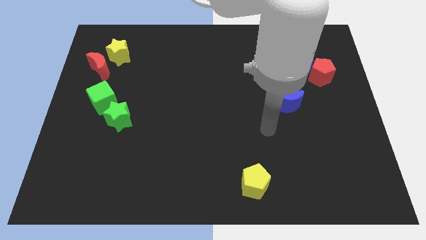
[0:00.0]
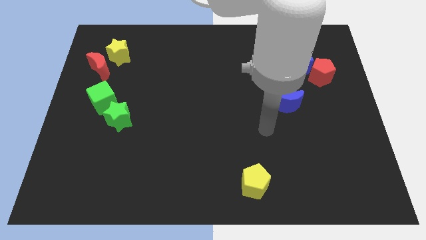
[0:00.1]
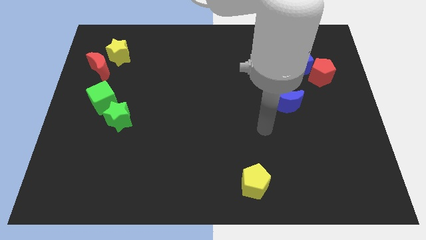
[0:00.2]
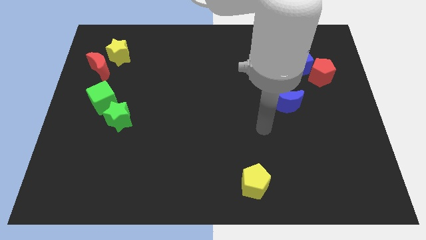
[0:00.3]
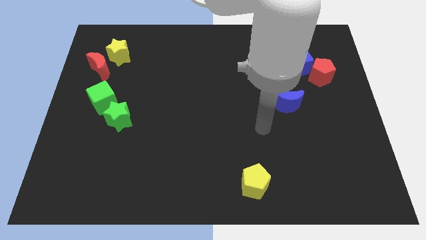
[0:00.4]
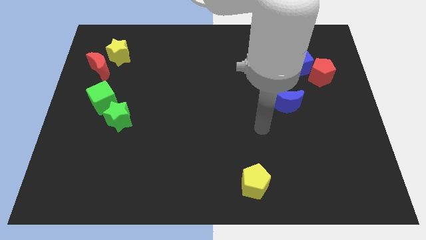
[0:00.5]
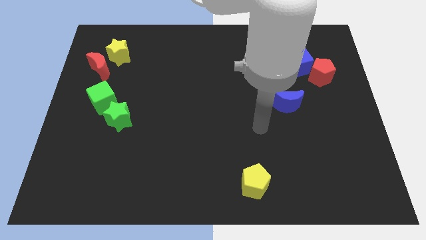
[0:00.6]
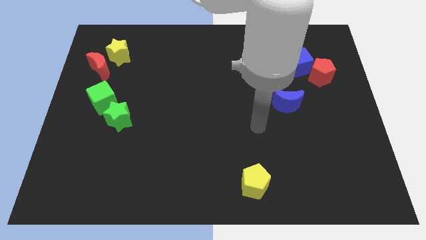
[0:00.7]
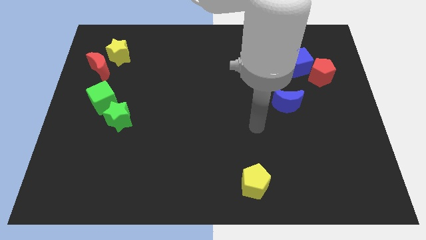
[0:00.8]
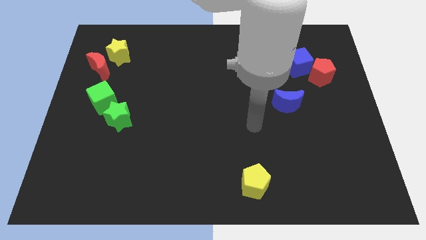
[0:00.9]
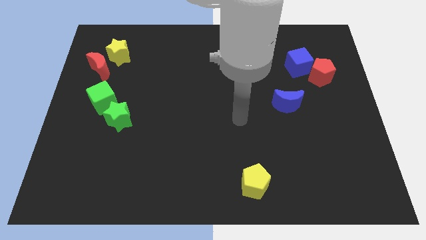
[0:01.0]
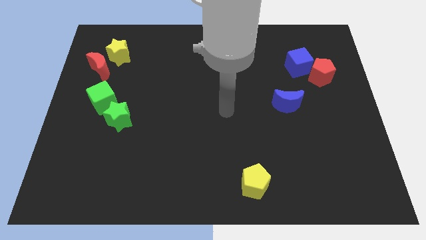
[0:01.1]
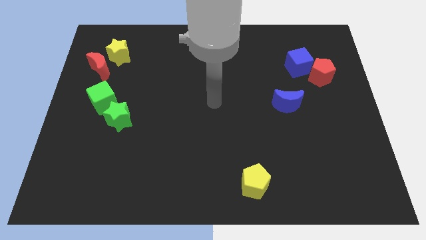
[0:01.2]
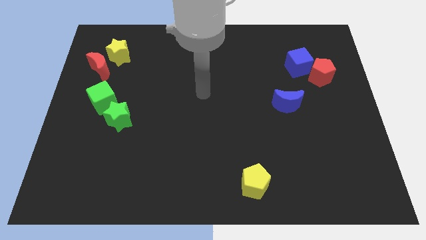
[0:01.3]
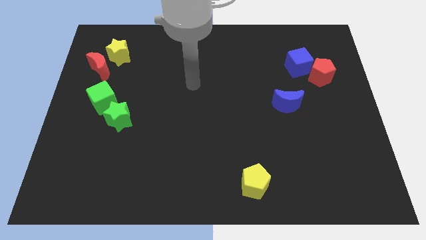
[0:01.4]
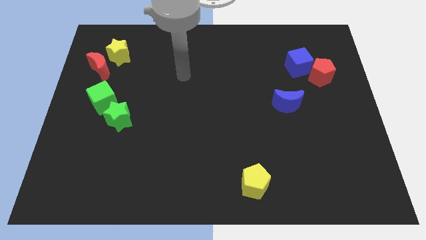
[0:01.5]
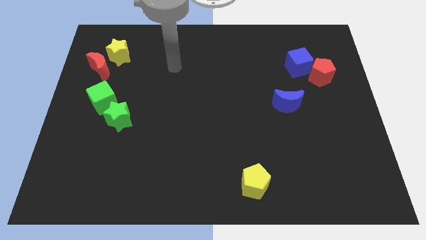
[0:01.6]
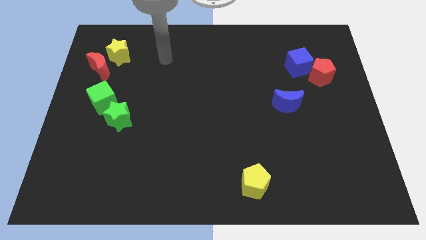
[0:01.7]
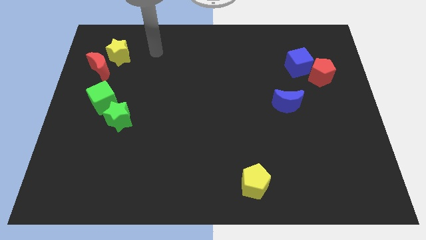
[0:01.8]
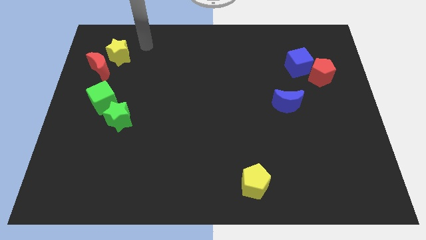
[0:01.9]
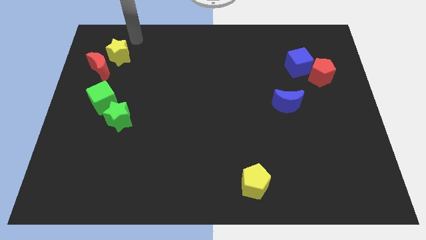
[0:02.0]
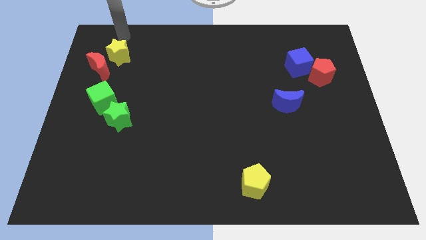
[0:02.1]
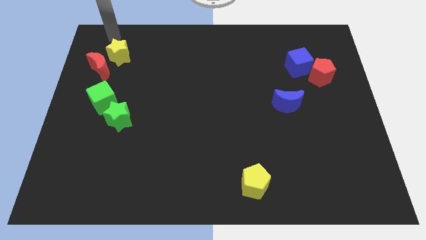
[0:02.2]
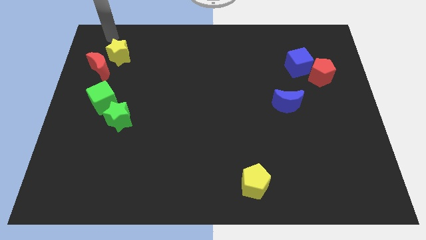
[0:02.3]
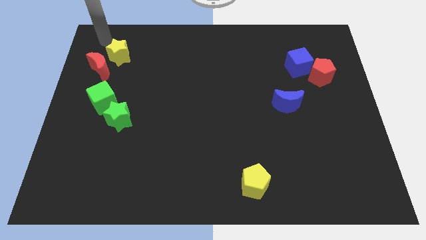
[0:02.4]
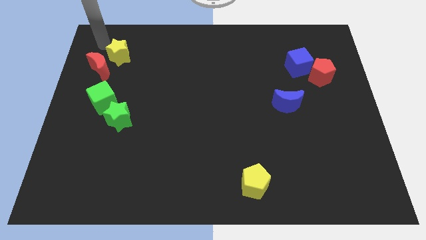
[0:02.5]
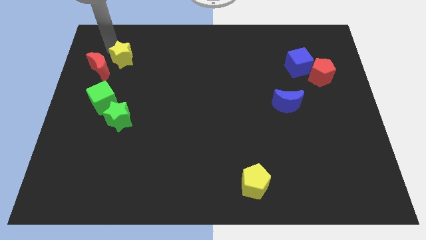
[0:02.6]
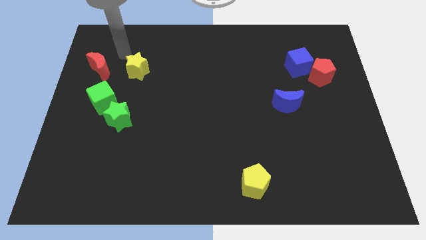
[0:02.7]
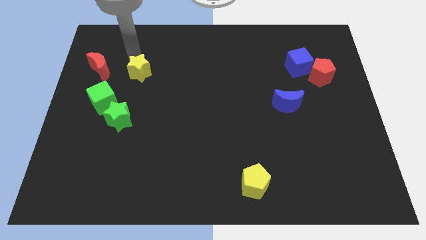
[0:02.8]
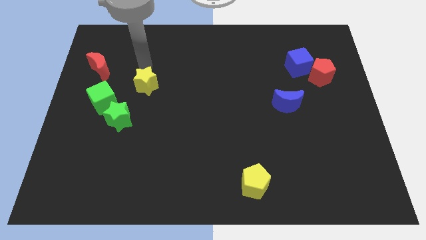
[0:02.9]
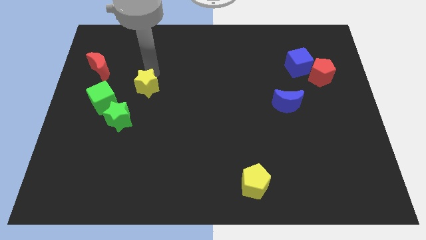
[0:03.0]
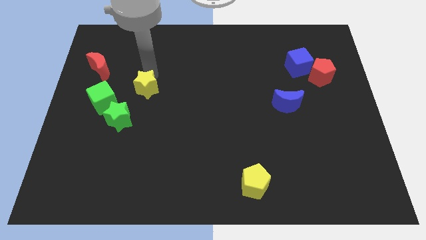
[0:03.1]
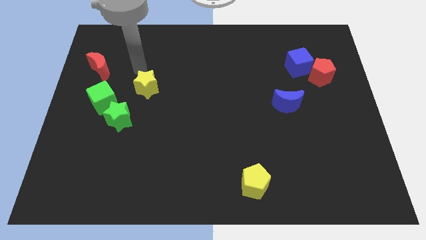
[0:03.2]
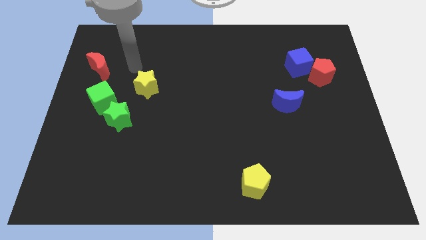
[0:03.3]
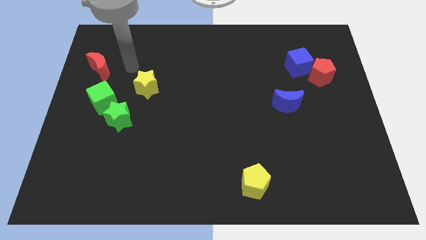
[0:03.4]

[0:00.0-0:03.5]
push the yellow star to the right of the green cube

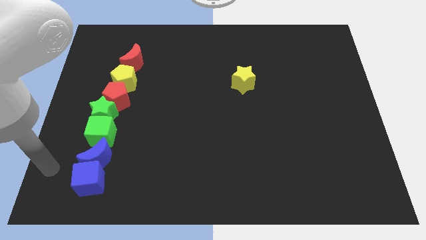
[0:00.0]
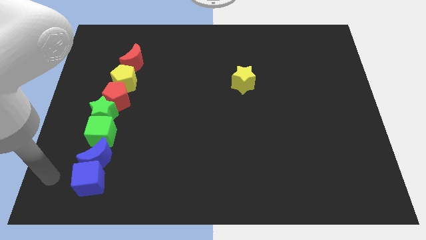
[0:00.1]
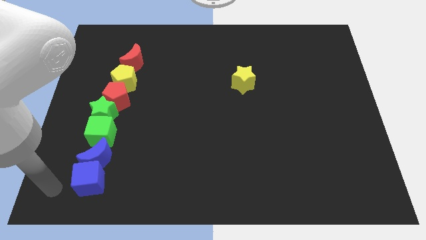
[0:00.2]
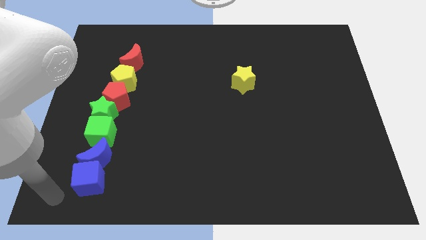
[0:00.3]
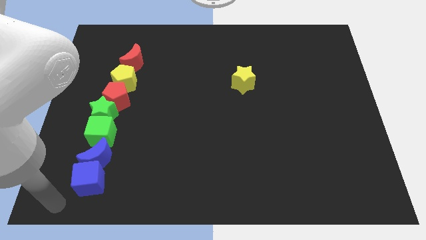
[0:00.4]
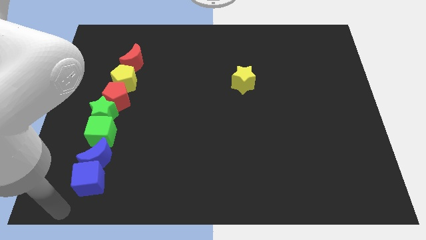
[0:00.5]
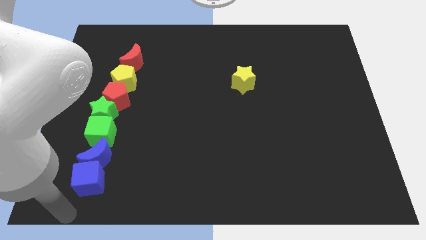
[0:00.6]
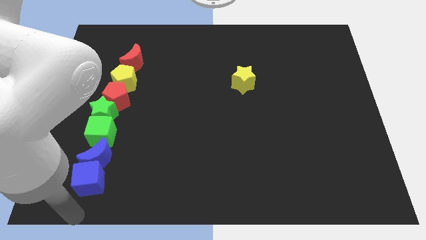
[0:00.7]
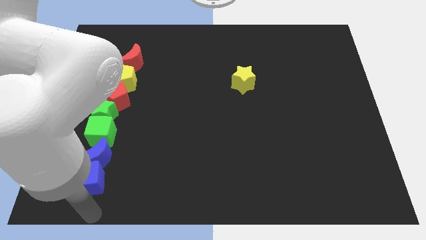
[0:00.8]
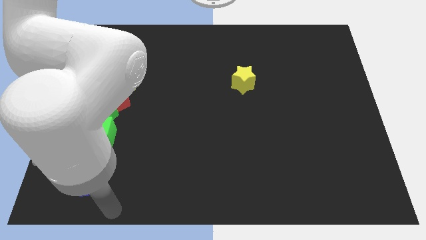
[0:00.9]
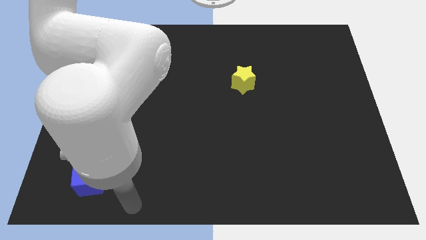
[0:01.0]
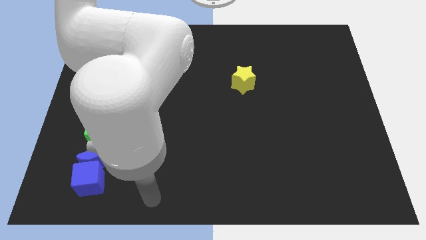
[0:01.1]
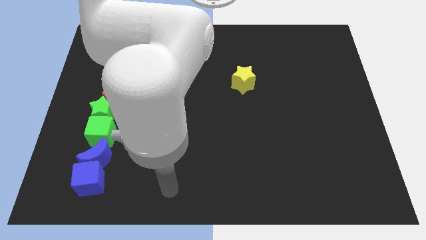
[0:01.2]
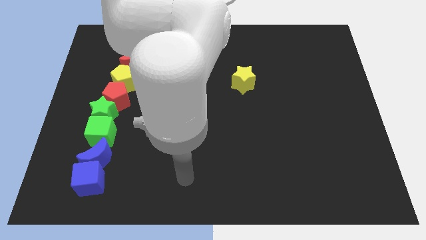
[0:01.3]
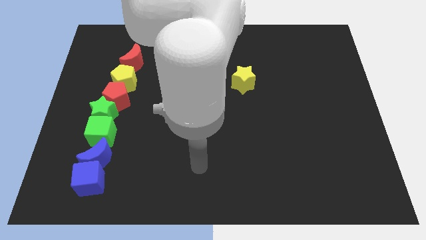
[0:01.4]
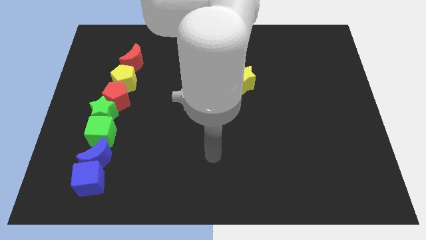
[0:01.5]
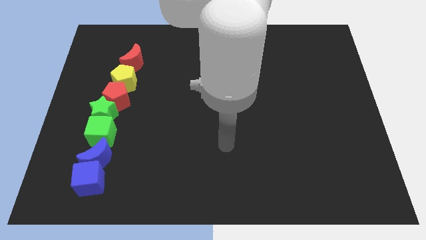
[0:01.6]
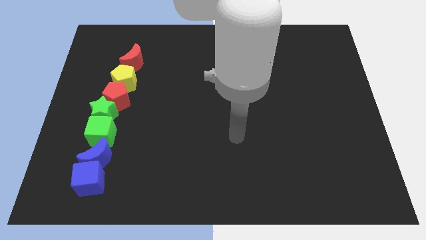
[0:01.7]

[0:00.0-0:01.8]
move arm towards yellow star

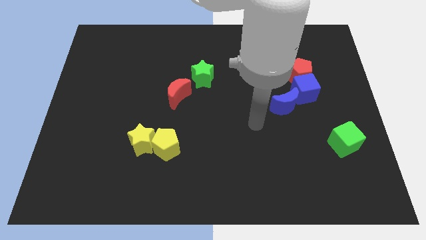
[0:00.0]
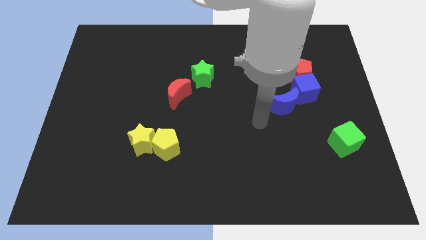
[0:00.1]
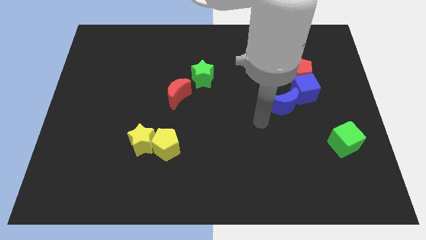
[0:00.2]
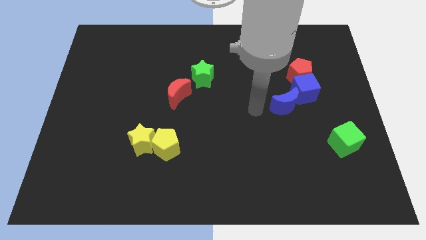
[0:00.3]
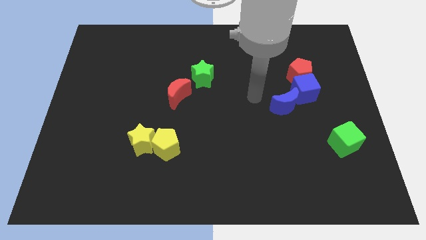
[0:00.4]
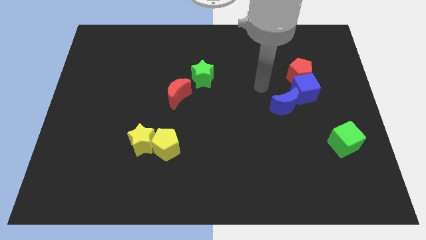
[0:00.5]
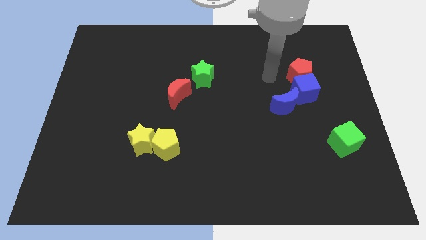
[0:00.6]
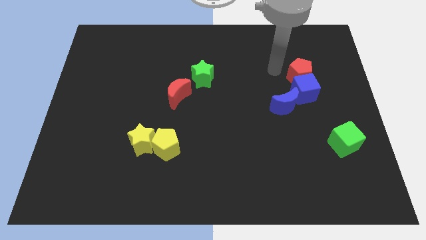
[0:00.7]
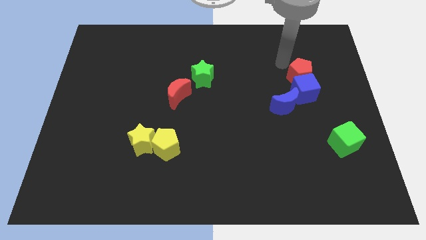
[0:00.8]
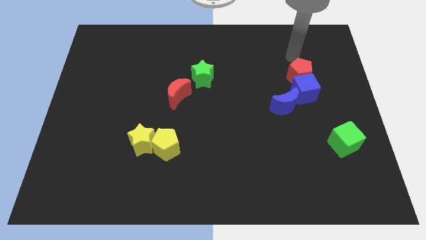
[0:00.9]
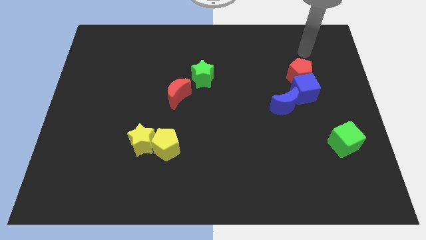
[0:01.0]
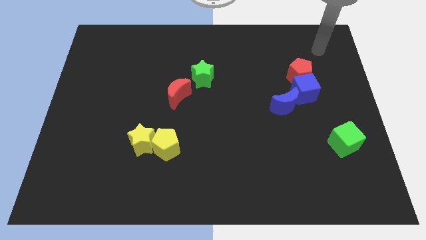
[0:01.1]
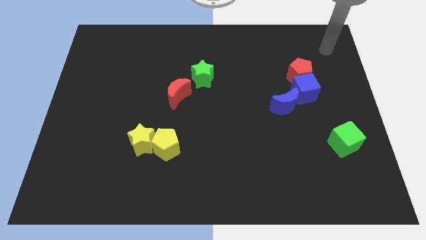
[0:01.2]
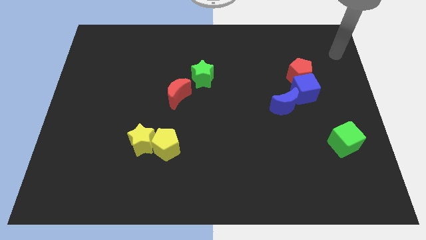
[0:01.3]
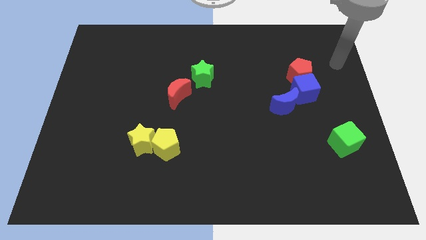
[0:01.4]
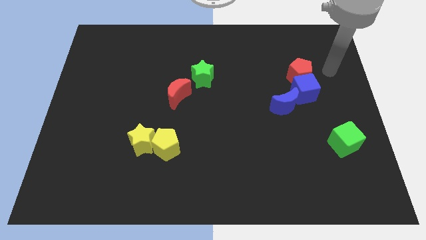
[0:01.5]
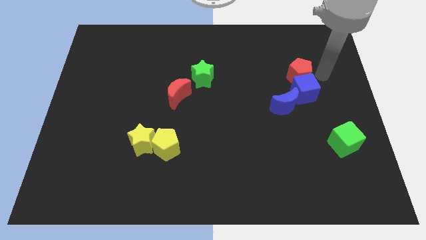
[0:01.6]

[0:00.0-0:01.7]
point your arm at the right of the red pentagon

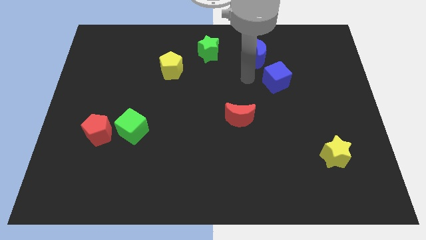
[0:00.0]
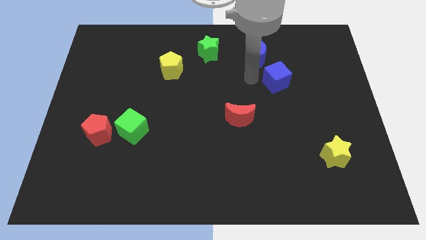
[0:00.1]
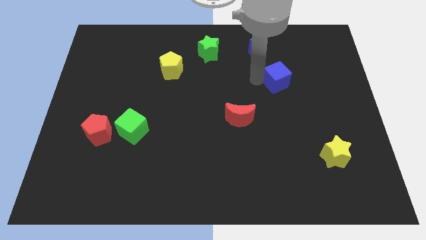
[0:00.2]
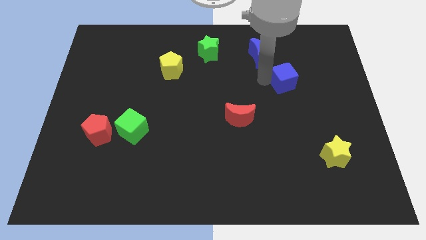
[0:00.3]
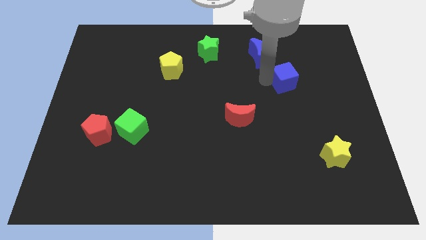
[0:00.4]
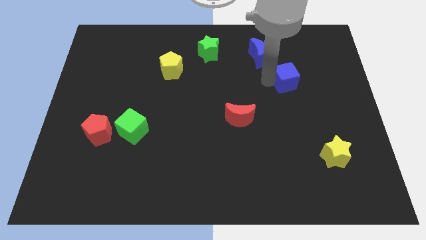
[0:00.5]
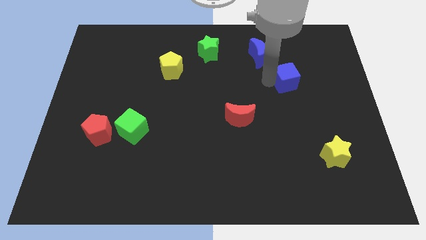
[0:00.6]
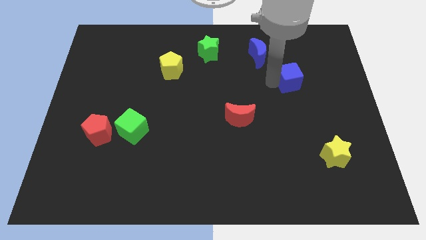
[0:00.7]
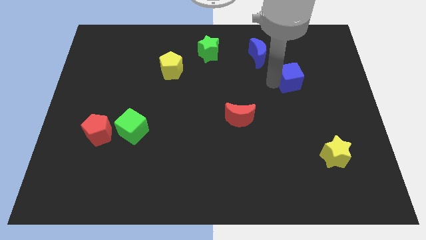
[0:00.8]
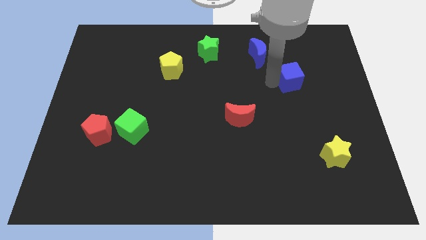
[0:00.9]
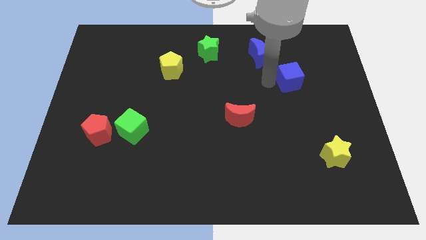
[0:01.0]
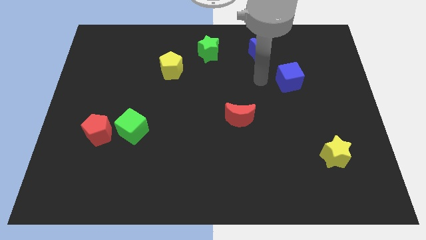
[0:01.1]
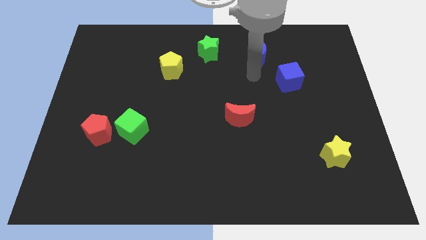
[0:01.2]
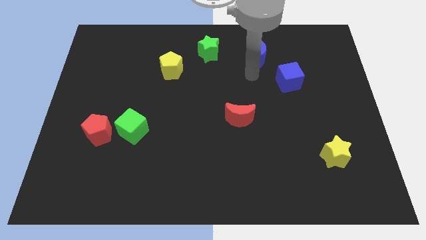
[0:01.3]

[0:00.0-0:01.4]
push the blue cube towards the top right of the board

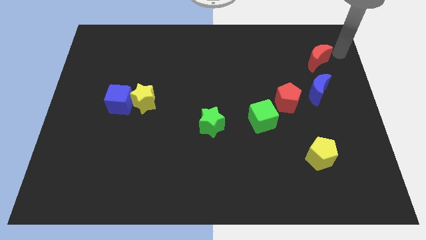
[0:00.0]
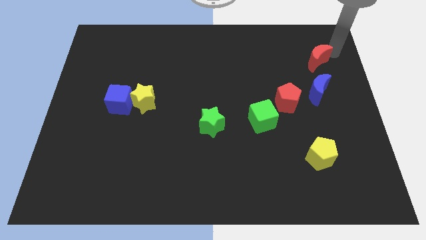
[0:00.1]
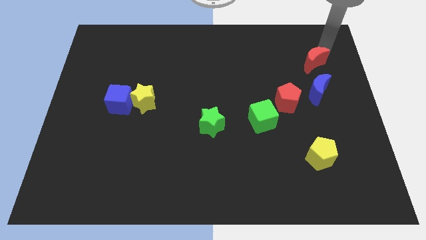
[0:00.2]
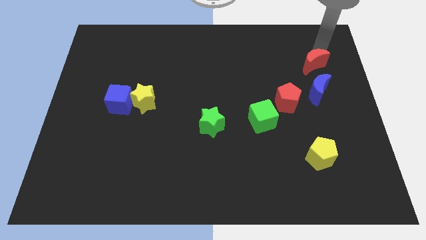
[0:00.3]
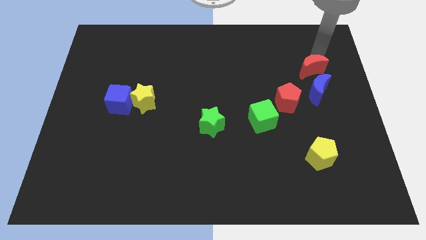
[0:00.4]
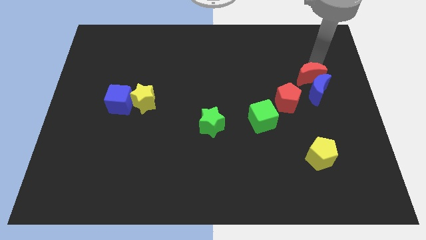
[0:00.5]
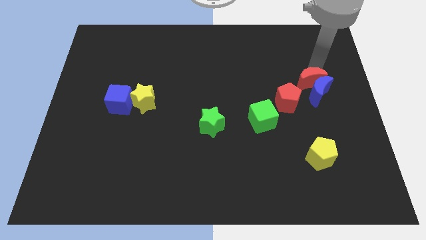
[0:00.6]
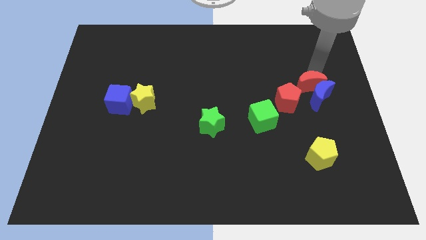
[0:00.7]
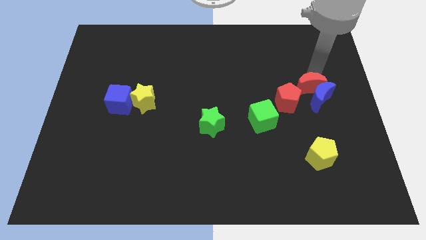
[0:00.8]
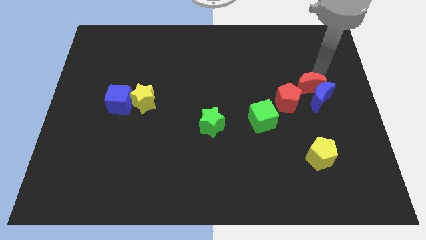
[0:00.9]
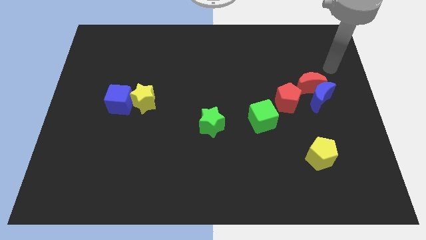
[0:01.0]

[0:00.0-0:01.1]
slide red moon into blue moon
